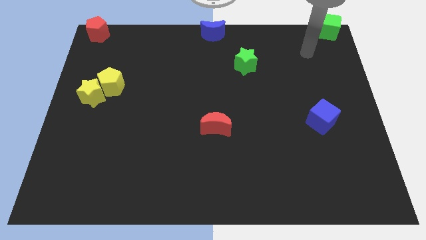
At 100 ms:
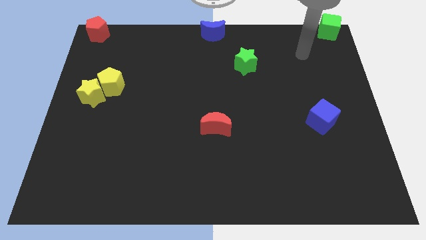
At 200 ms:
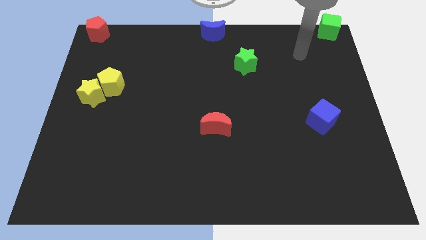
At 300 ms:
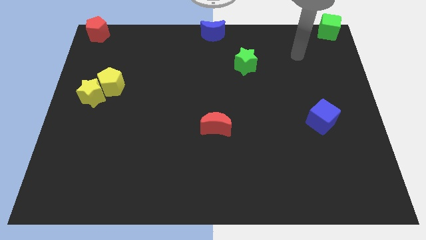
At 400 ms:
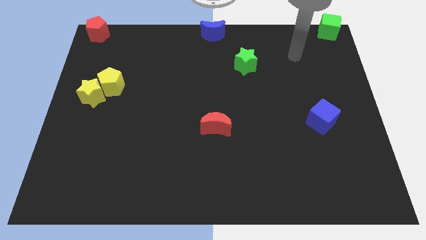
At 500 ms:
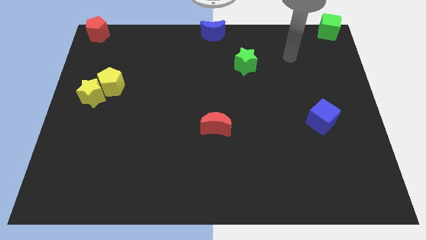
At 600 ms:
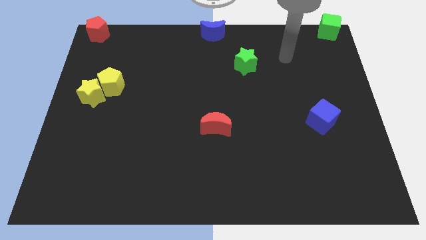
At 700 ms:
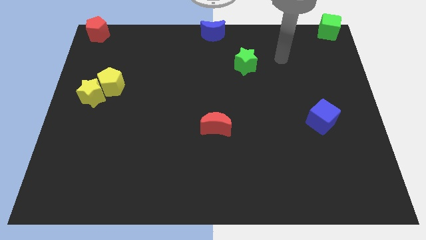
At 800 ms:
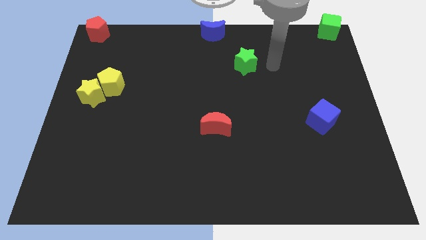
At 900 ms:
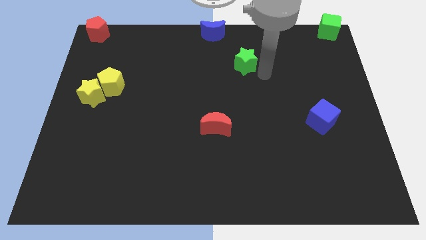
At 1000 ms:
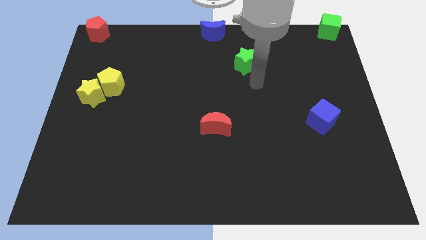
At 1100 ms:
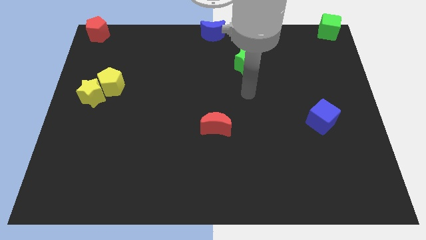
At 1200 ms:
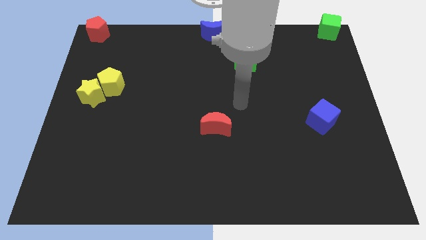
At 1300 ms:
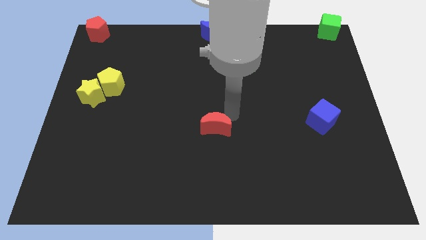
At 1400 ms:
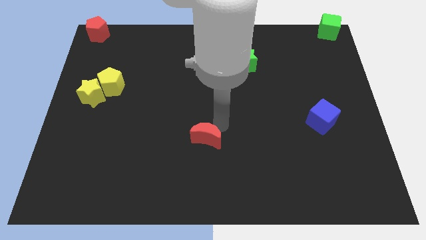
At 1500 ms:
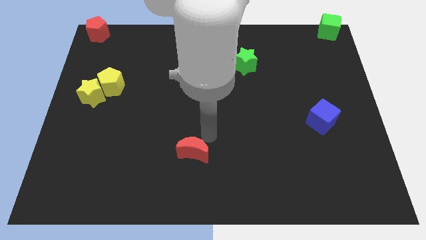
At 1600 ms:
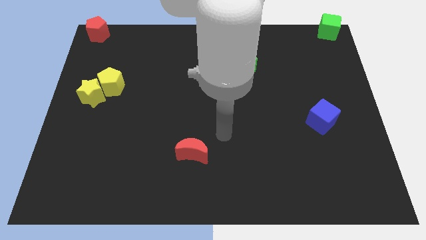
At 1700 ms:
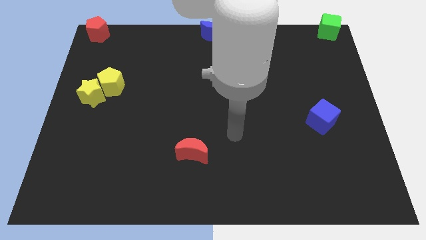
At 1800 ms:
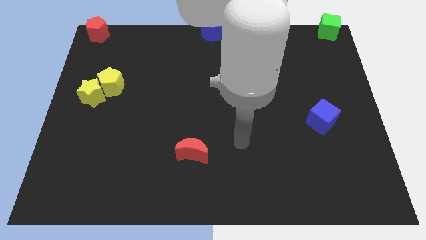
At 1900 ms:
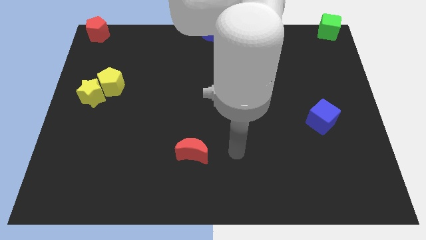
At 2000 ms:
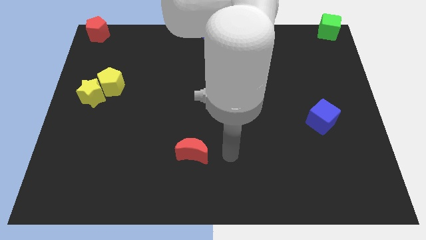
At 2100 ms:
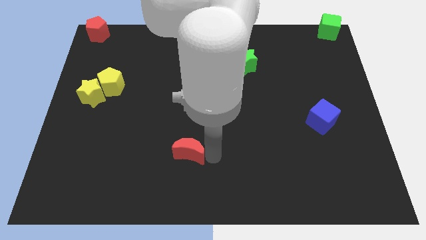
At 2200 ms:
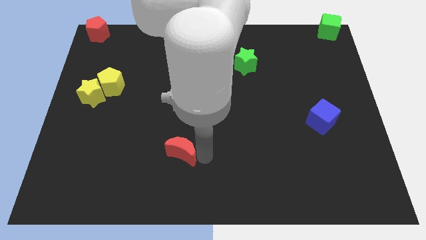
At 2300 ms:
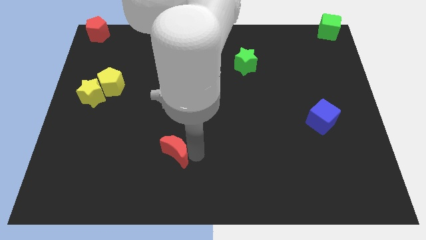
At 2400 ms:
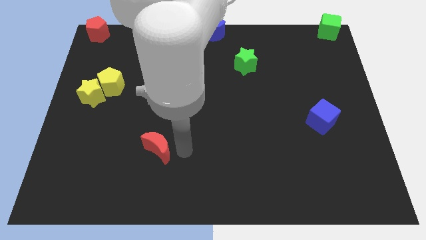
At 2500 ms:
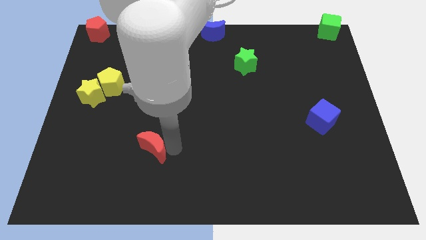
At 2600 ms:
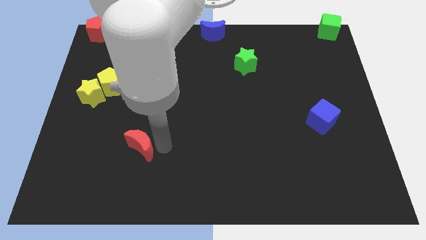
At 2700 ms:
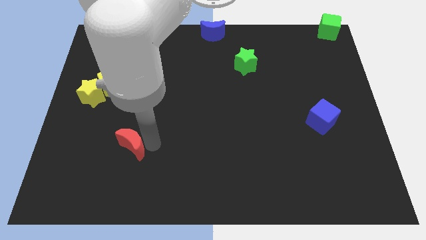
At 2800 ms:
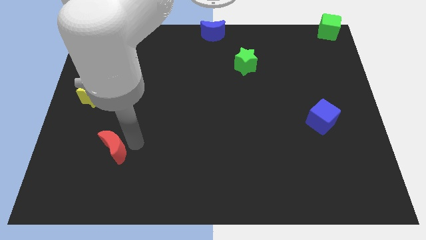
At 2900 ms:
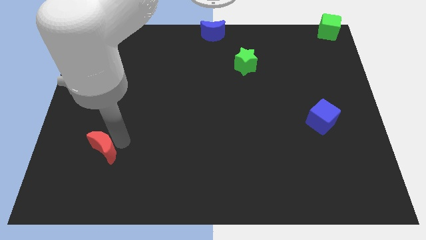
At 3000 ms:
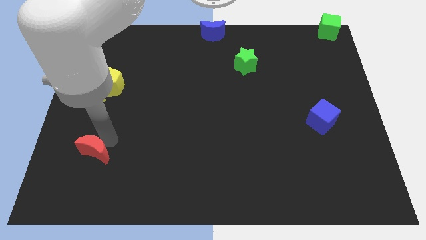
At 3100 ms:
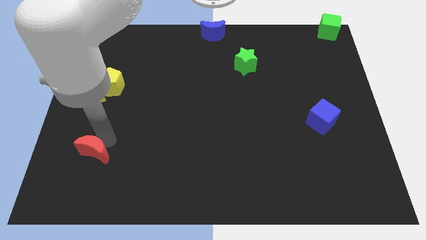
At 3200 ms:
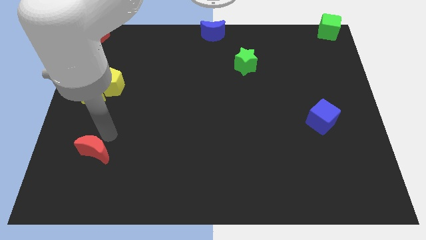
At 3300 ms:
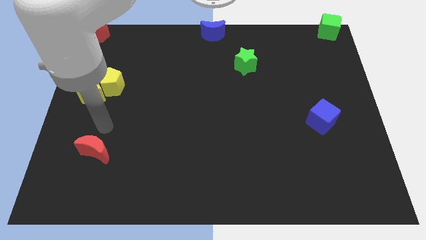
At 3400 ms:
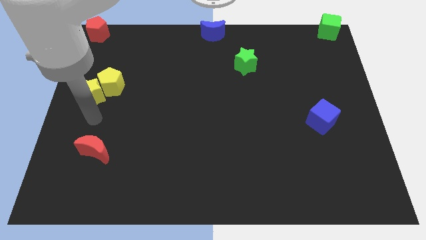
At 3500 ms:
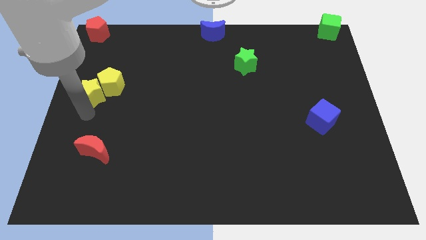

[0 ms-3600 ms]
place the red crescent below the yellow blocks

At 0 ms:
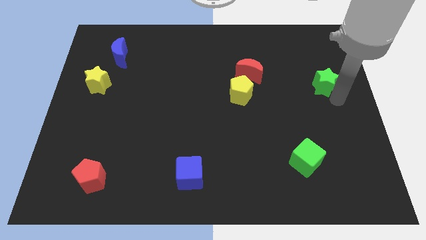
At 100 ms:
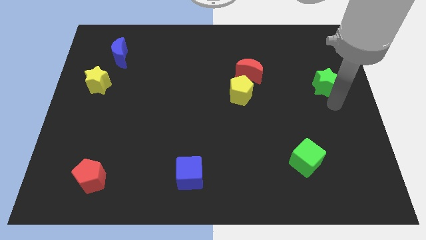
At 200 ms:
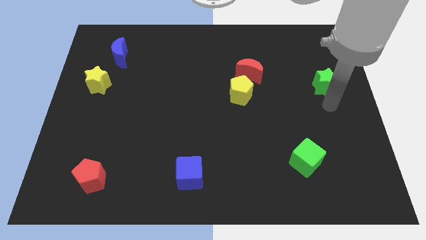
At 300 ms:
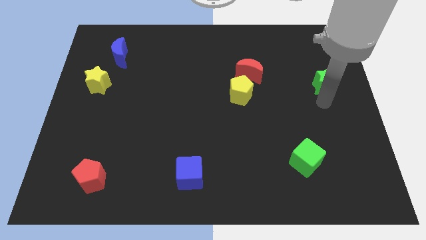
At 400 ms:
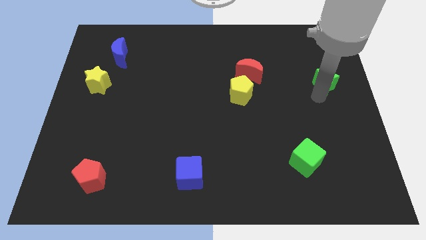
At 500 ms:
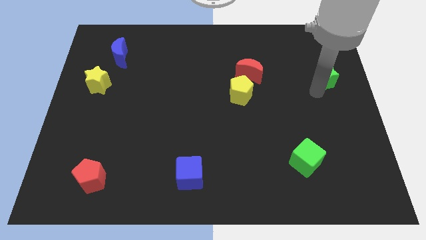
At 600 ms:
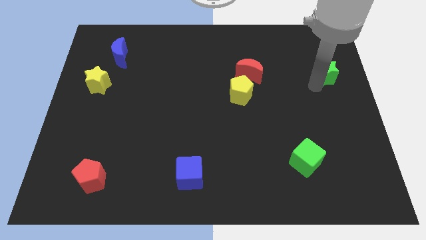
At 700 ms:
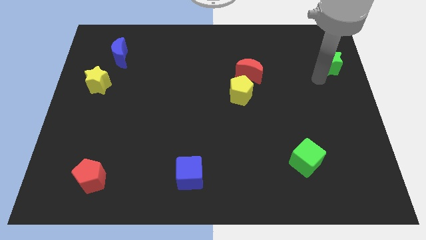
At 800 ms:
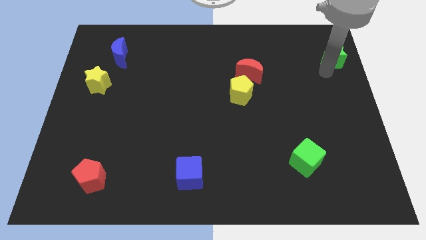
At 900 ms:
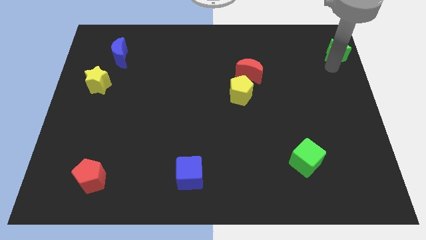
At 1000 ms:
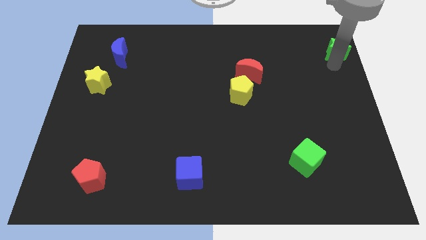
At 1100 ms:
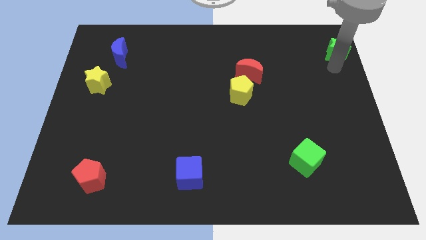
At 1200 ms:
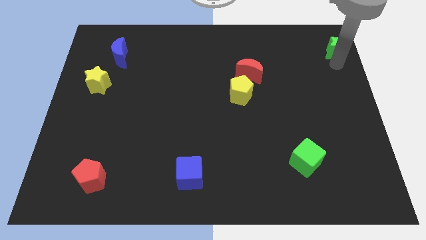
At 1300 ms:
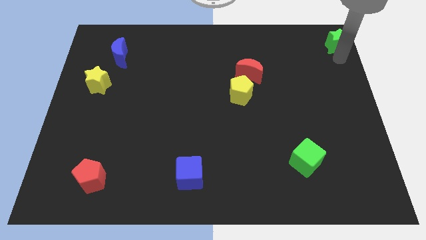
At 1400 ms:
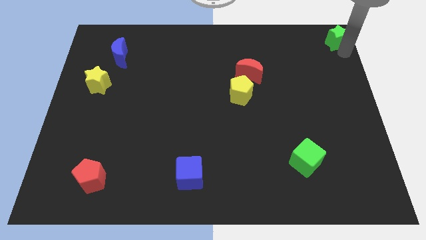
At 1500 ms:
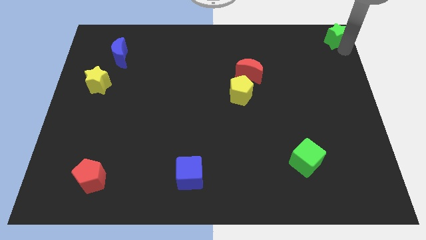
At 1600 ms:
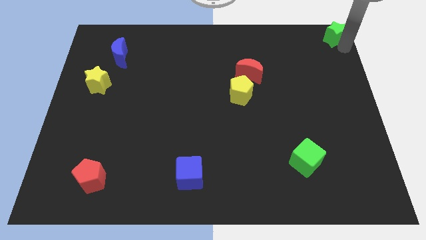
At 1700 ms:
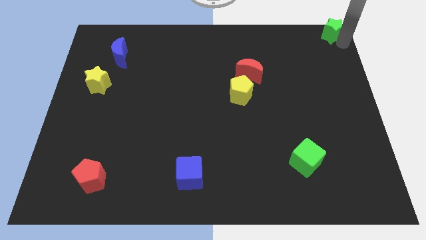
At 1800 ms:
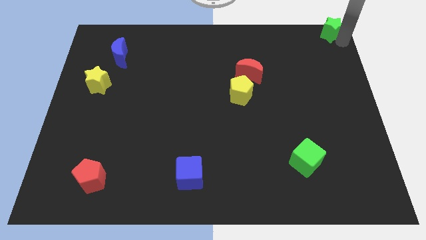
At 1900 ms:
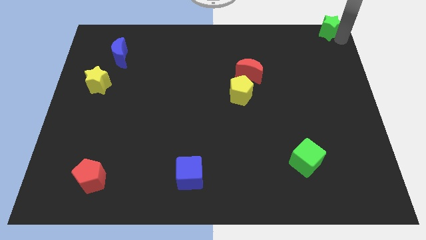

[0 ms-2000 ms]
move the green star towards the top right corner of the board

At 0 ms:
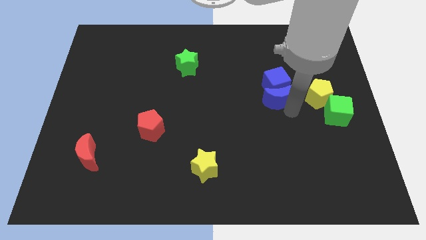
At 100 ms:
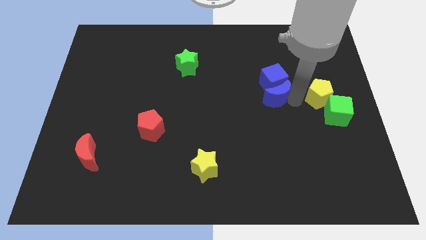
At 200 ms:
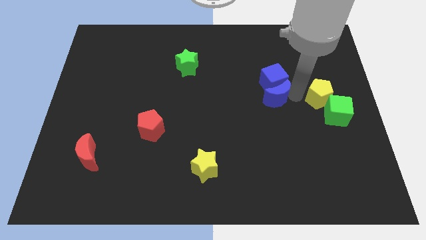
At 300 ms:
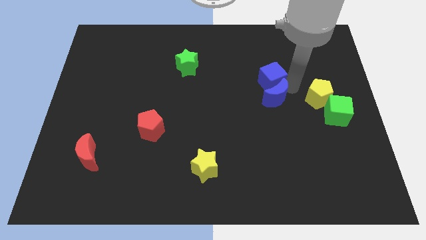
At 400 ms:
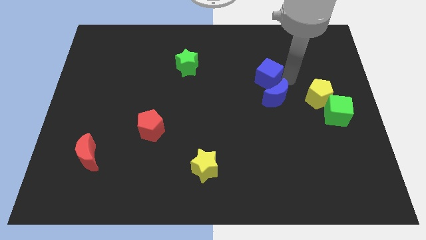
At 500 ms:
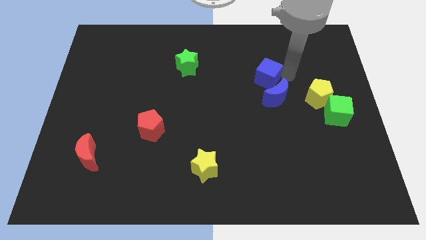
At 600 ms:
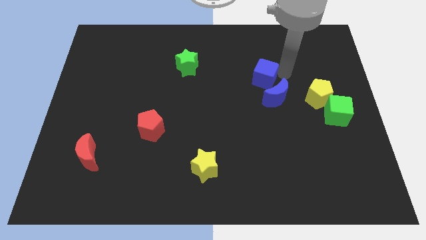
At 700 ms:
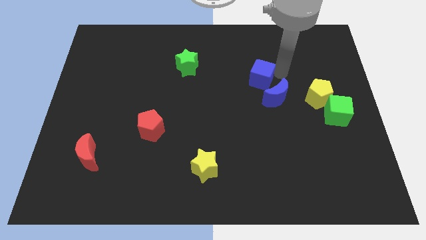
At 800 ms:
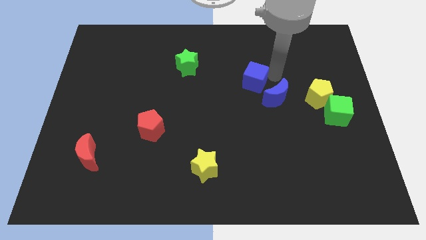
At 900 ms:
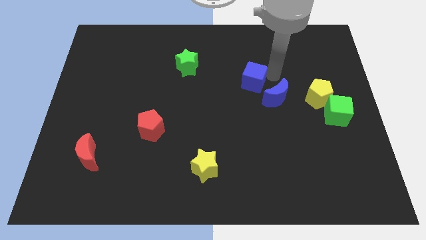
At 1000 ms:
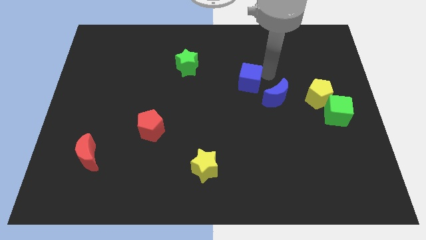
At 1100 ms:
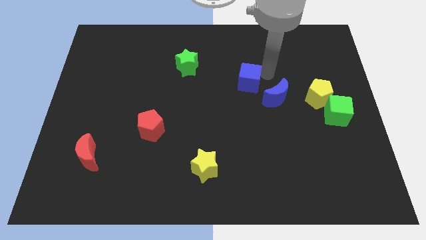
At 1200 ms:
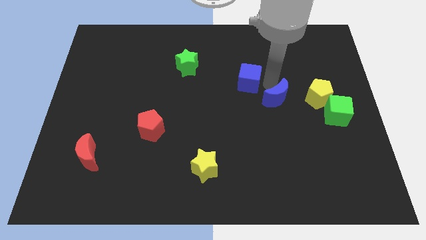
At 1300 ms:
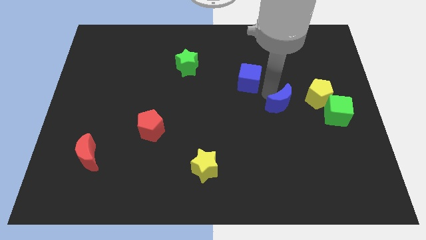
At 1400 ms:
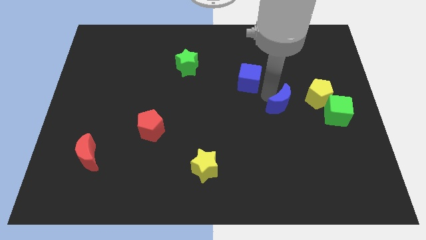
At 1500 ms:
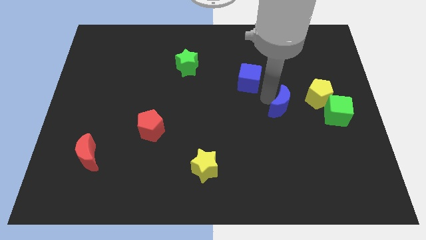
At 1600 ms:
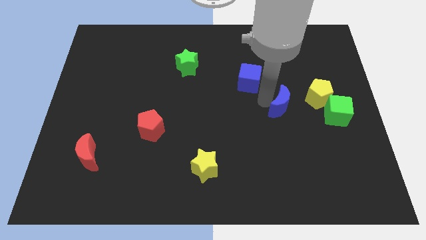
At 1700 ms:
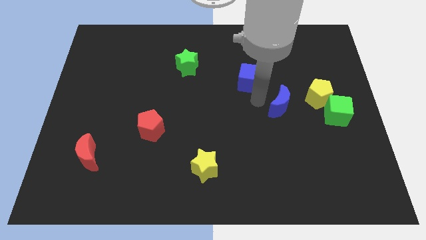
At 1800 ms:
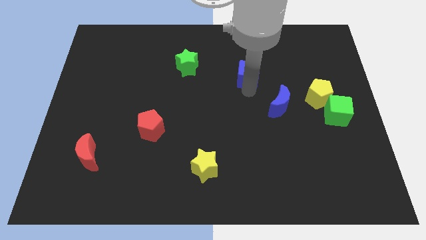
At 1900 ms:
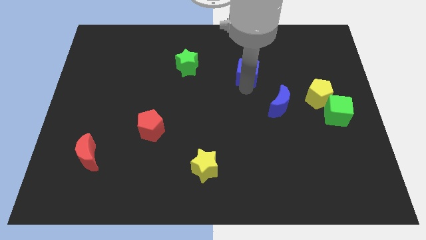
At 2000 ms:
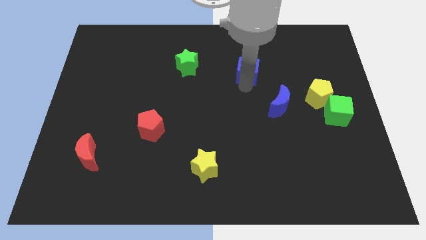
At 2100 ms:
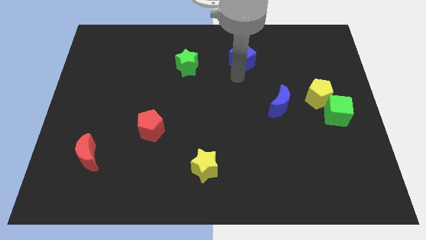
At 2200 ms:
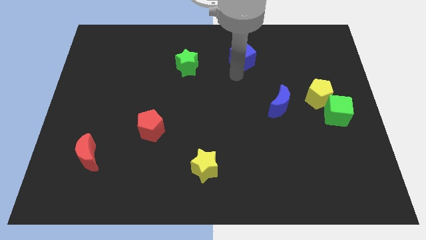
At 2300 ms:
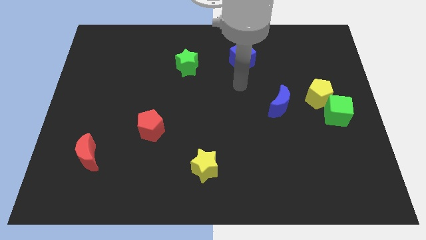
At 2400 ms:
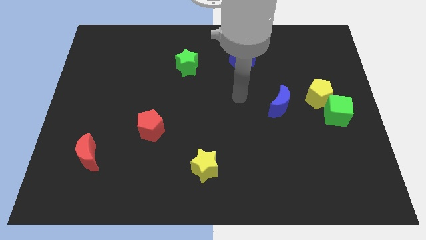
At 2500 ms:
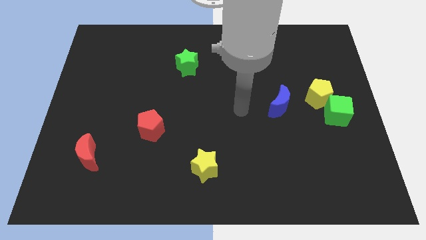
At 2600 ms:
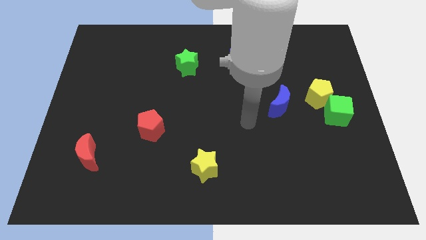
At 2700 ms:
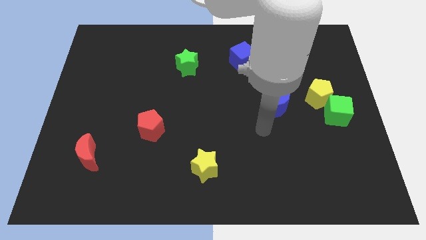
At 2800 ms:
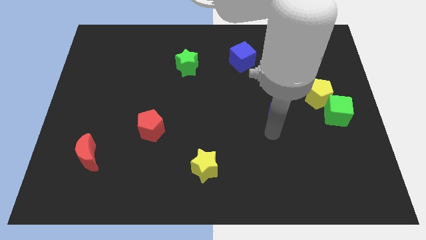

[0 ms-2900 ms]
separate the blue moon and the blue cube

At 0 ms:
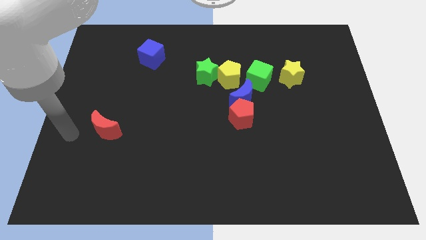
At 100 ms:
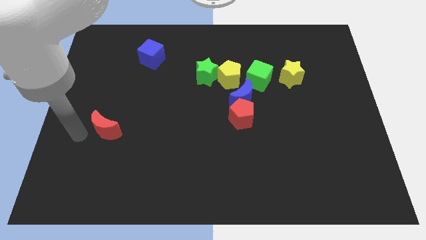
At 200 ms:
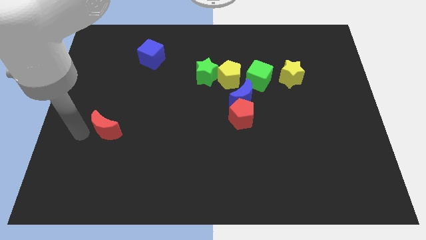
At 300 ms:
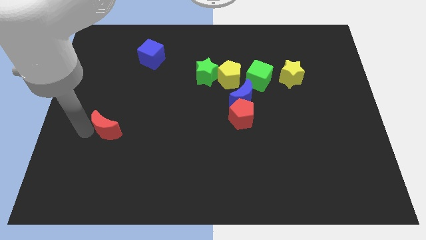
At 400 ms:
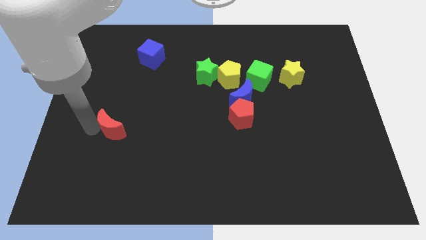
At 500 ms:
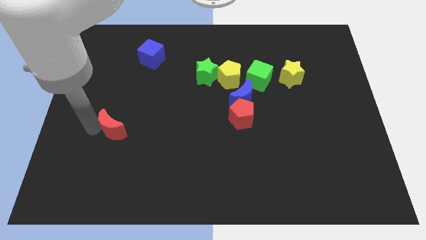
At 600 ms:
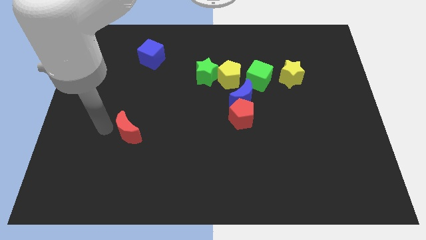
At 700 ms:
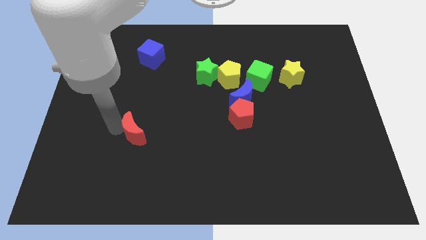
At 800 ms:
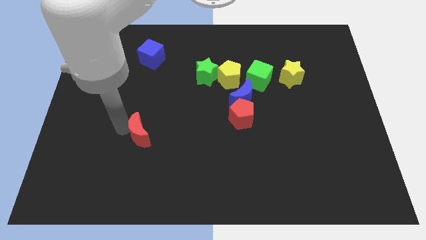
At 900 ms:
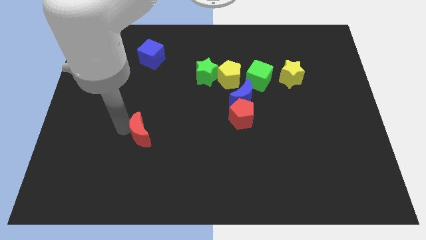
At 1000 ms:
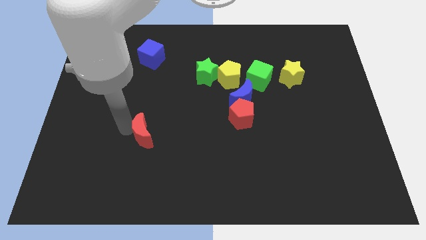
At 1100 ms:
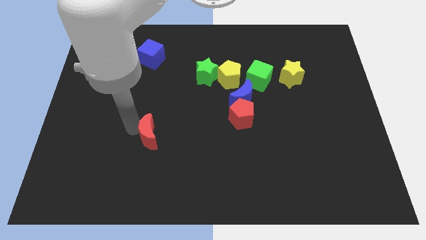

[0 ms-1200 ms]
move the red moon to the center
